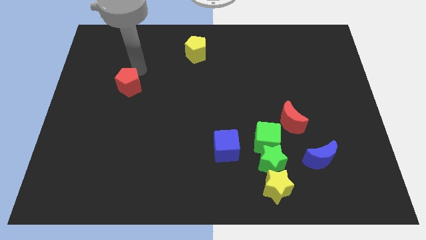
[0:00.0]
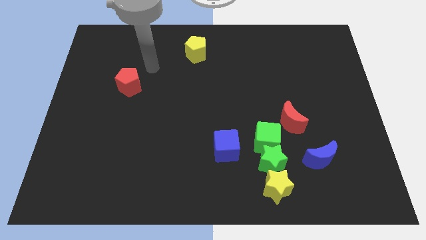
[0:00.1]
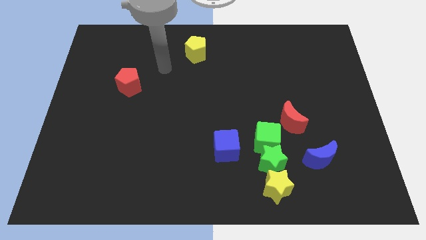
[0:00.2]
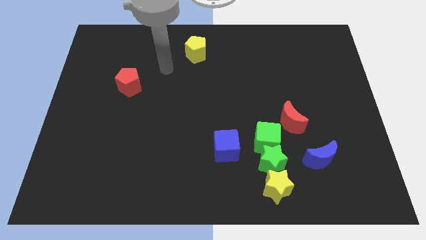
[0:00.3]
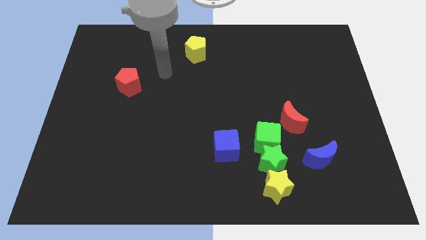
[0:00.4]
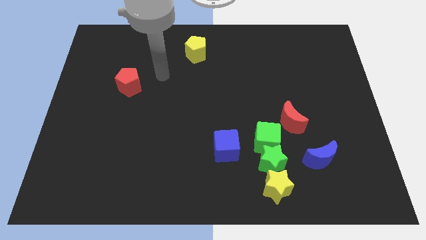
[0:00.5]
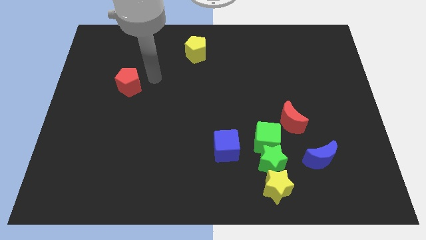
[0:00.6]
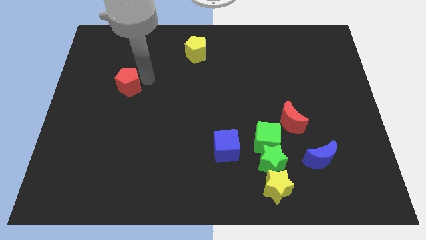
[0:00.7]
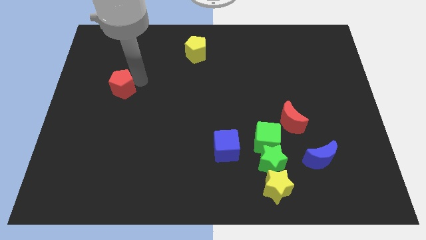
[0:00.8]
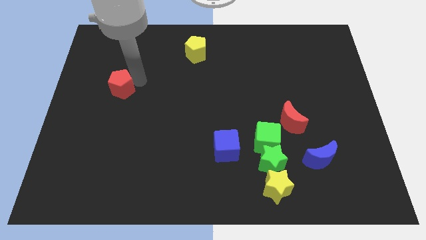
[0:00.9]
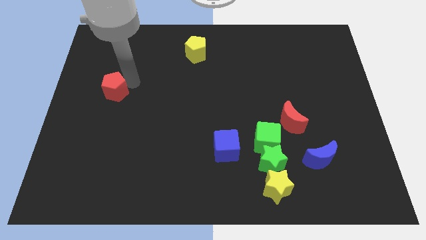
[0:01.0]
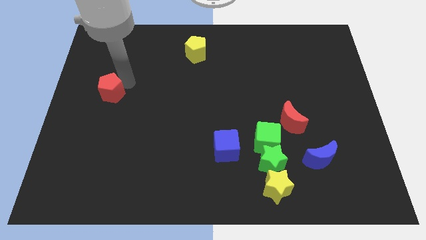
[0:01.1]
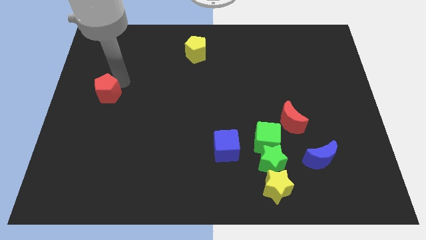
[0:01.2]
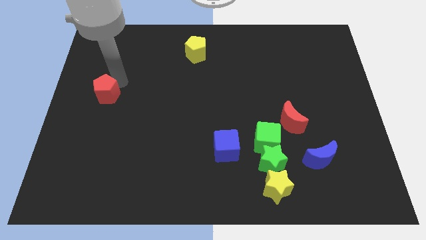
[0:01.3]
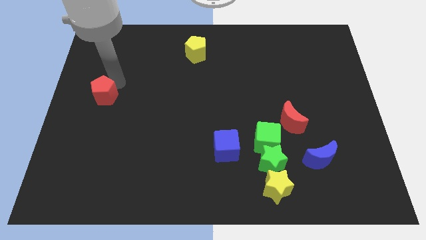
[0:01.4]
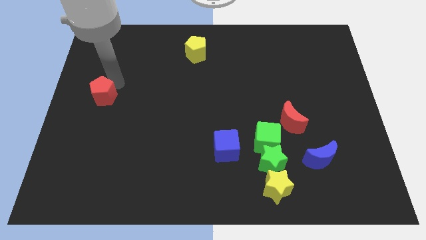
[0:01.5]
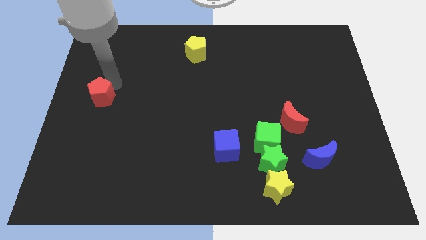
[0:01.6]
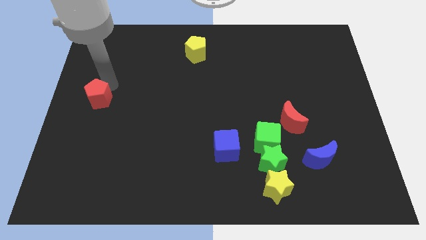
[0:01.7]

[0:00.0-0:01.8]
move the red pentagon to the center left

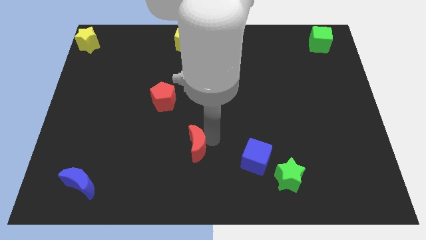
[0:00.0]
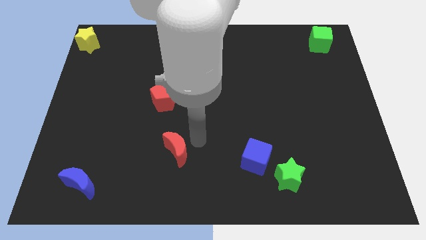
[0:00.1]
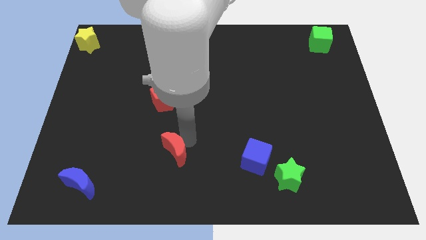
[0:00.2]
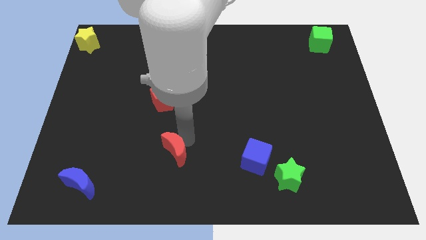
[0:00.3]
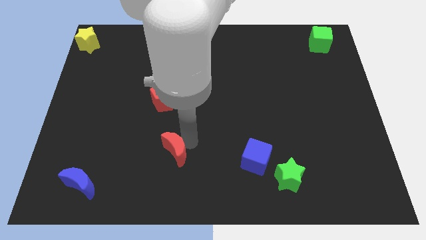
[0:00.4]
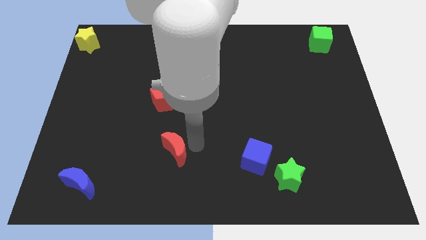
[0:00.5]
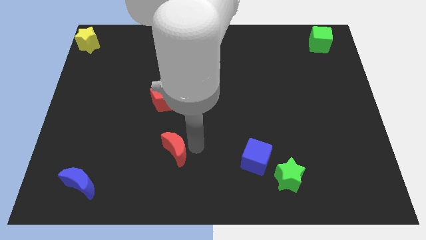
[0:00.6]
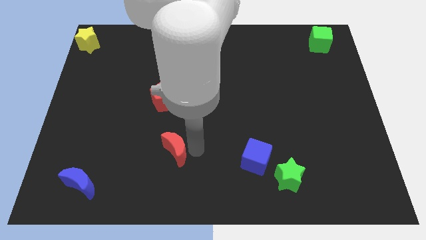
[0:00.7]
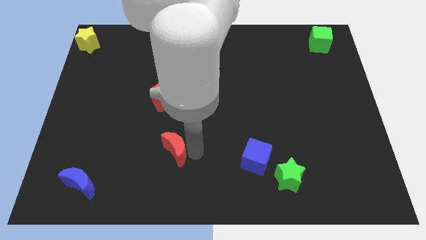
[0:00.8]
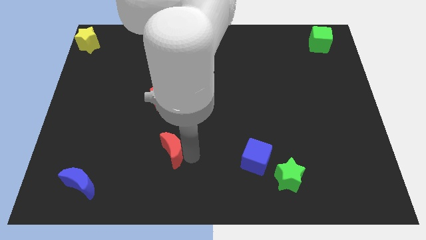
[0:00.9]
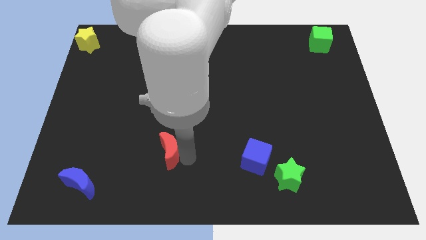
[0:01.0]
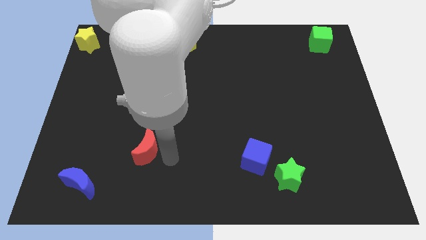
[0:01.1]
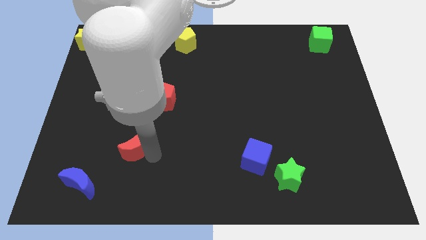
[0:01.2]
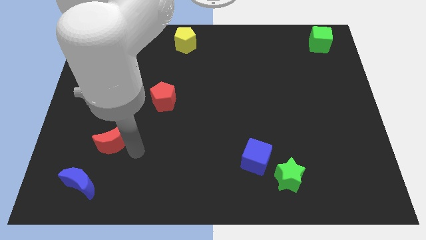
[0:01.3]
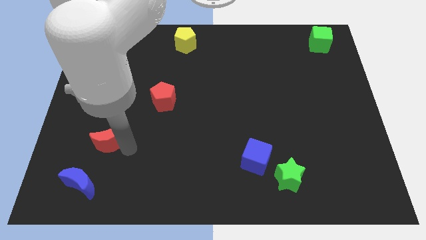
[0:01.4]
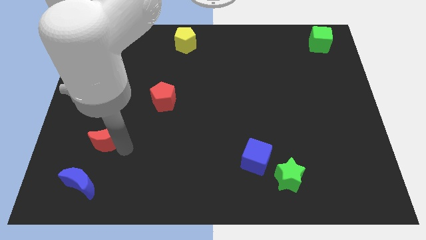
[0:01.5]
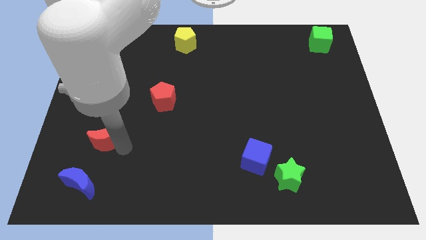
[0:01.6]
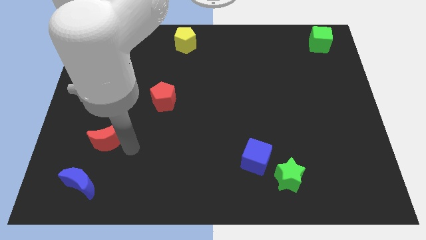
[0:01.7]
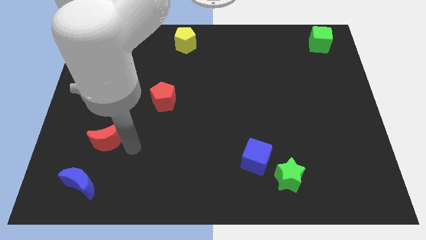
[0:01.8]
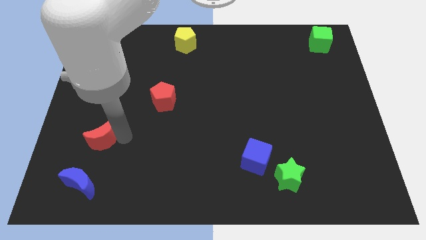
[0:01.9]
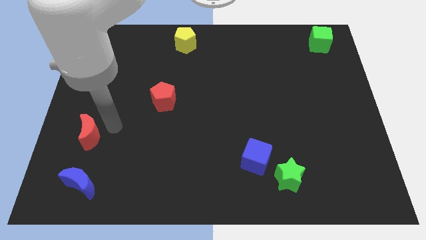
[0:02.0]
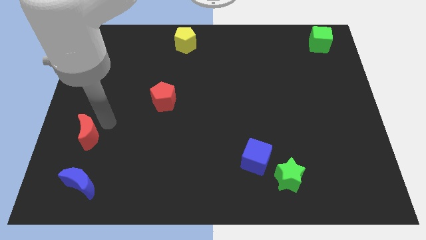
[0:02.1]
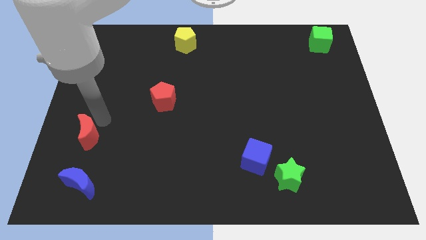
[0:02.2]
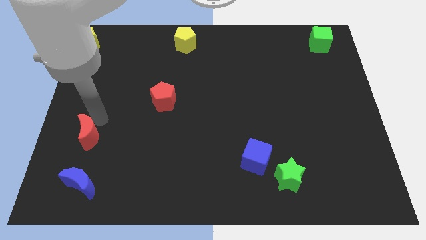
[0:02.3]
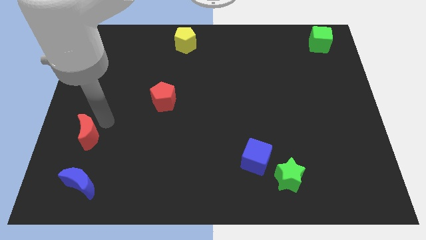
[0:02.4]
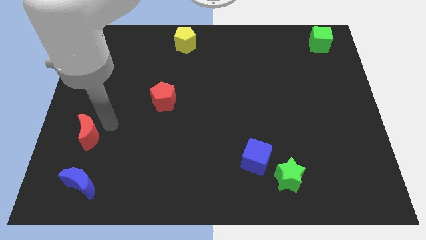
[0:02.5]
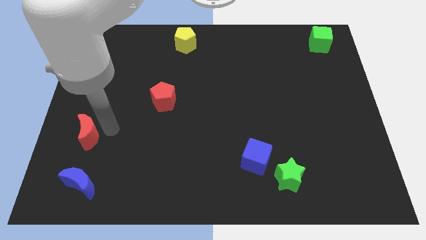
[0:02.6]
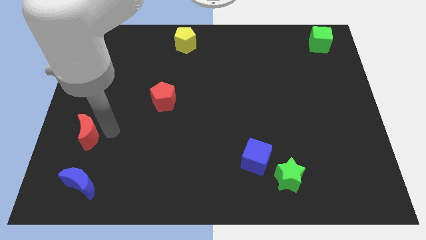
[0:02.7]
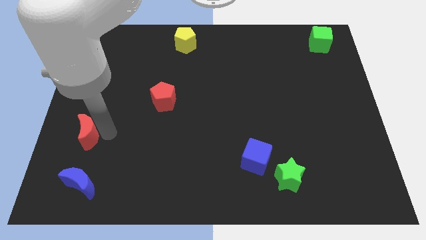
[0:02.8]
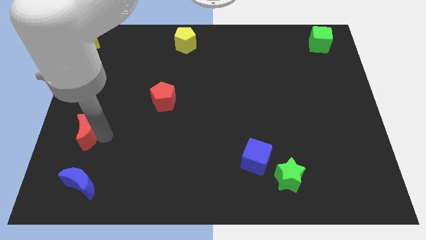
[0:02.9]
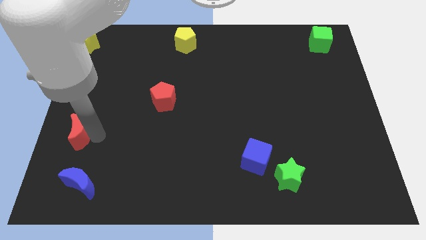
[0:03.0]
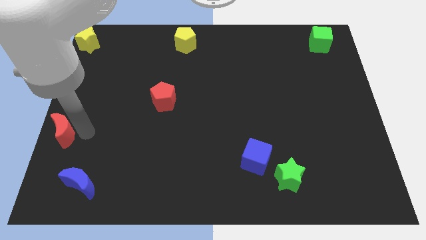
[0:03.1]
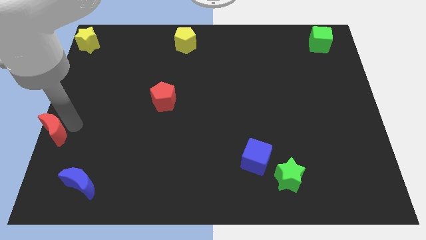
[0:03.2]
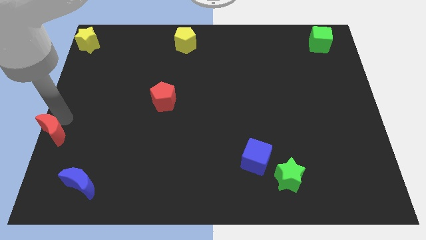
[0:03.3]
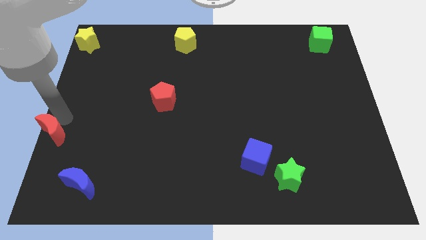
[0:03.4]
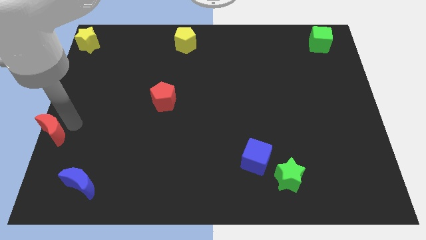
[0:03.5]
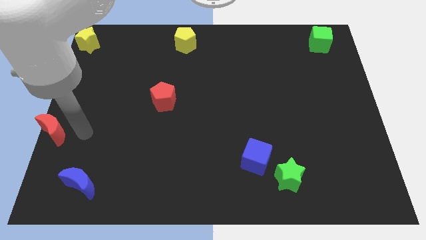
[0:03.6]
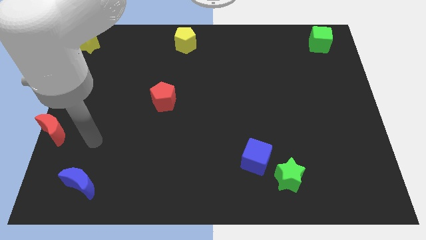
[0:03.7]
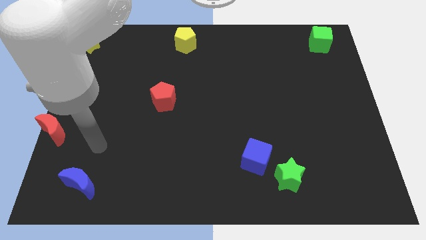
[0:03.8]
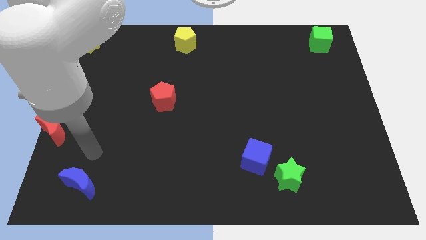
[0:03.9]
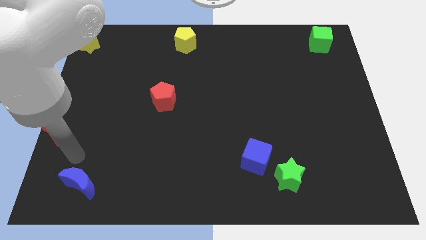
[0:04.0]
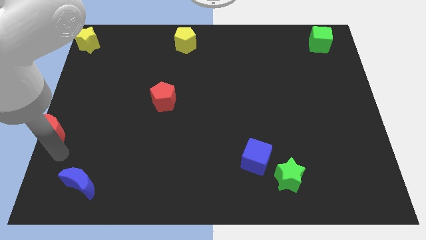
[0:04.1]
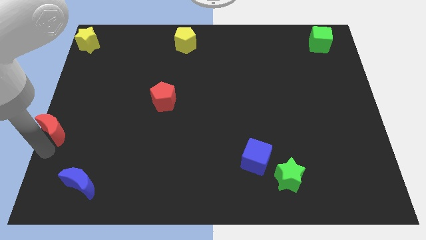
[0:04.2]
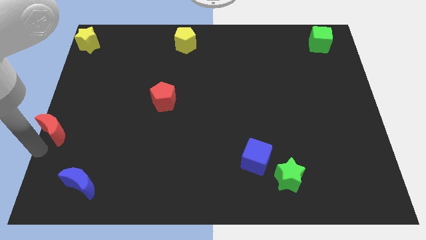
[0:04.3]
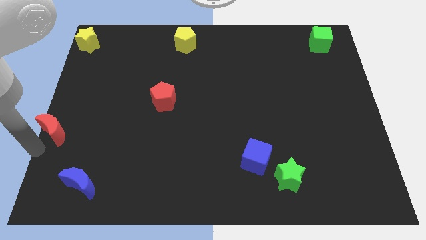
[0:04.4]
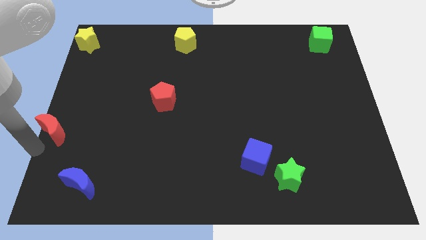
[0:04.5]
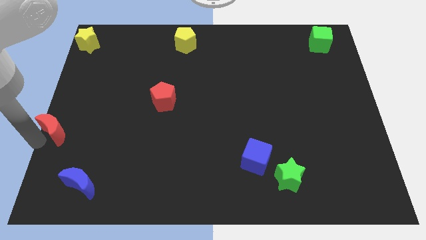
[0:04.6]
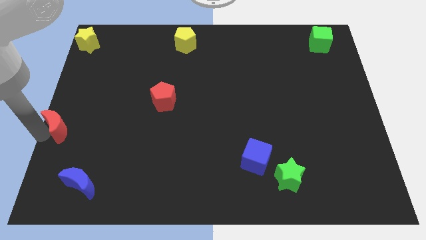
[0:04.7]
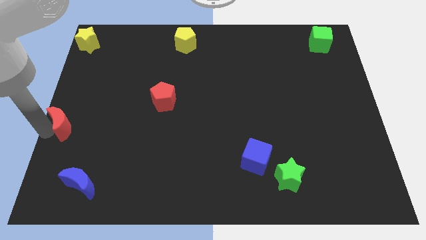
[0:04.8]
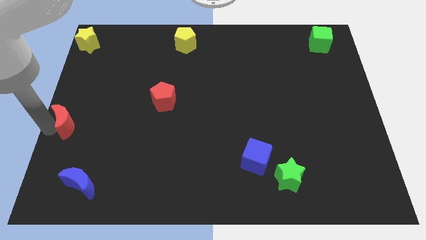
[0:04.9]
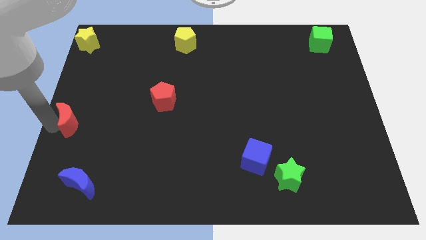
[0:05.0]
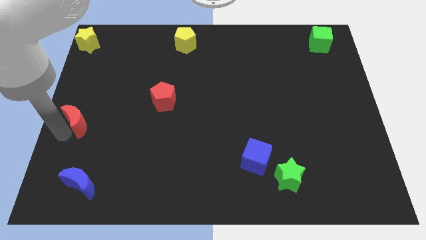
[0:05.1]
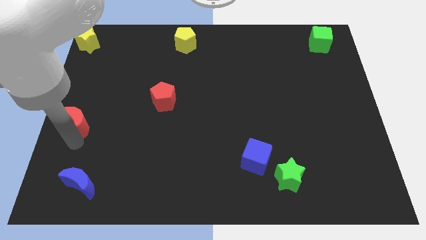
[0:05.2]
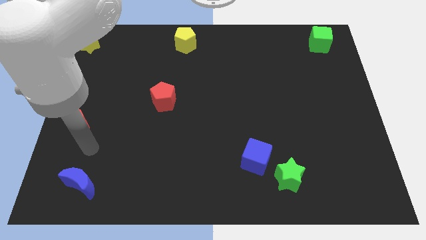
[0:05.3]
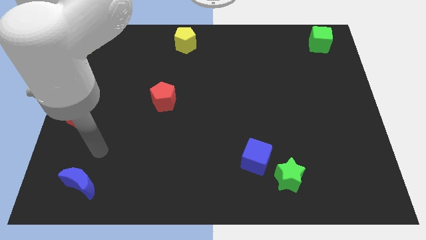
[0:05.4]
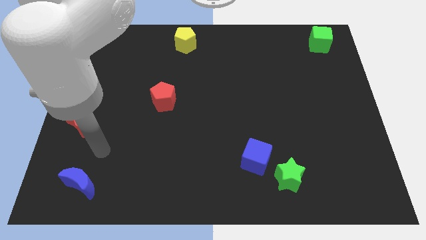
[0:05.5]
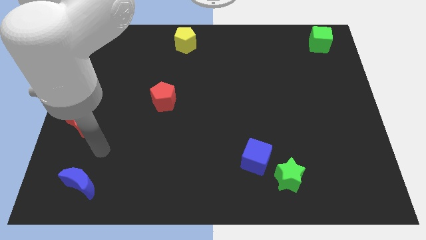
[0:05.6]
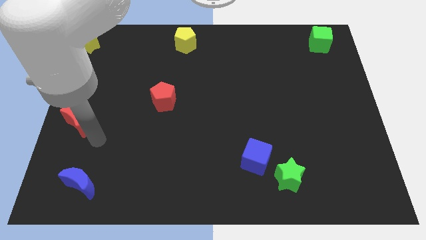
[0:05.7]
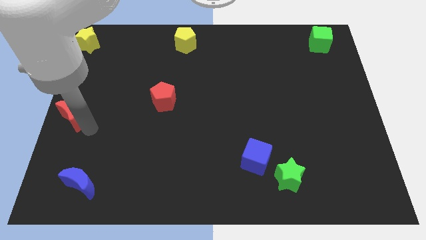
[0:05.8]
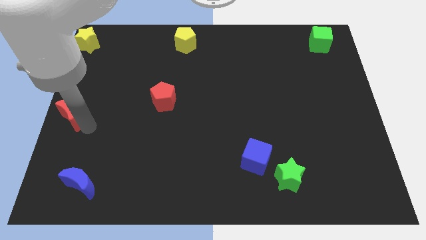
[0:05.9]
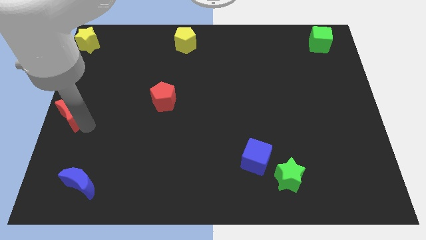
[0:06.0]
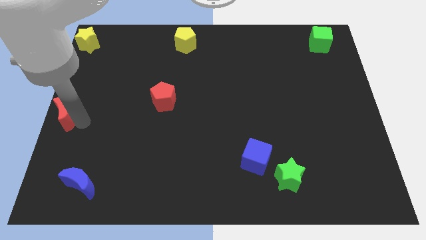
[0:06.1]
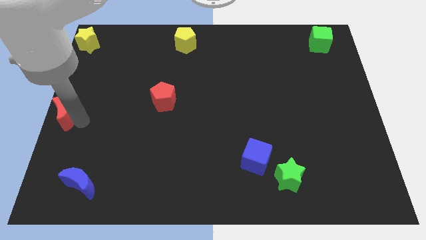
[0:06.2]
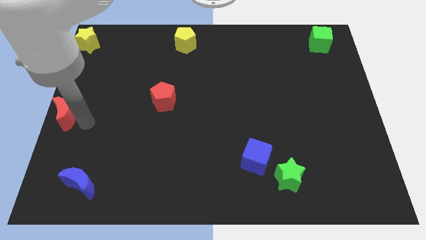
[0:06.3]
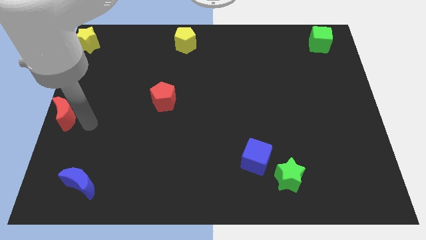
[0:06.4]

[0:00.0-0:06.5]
move the red moon to the center left of the board

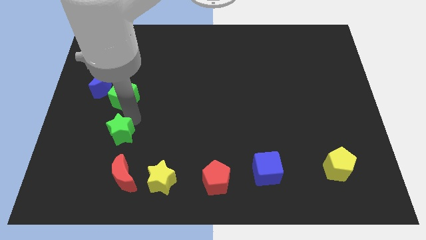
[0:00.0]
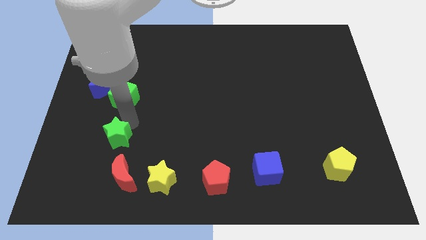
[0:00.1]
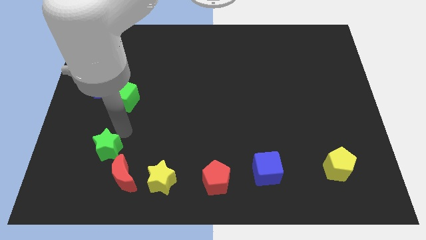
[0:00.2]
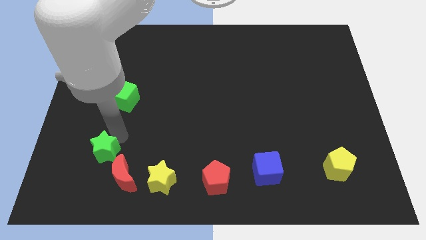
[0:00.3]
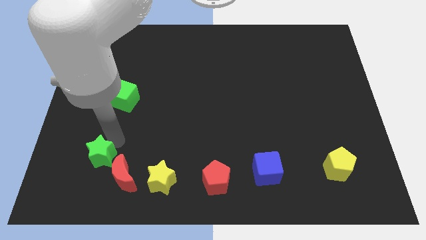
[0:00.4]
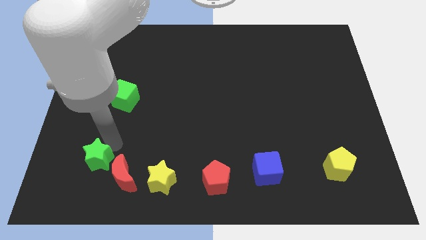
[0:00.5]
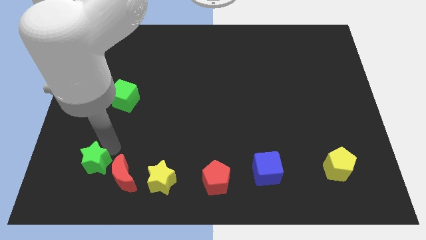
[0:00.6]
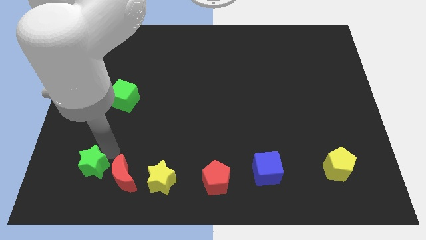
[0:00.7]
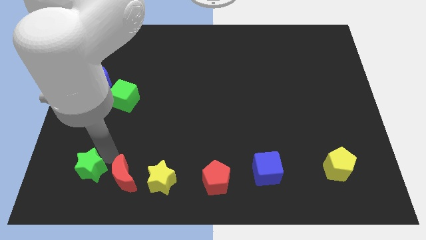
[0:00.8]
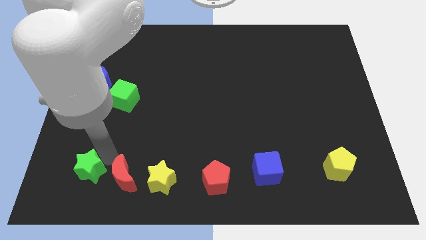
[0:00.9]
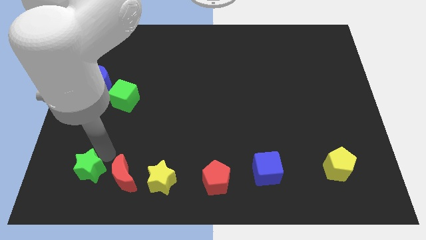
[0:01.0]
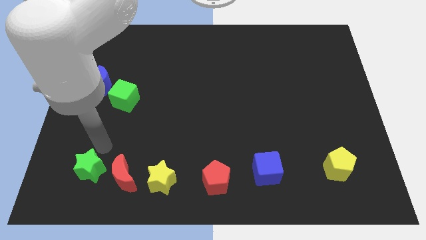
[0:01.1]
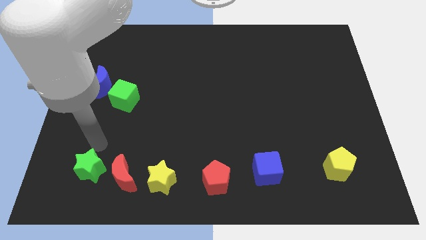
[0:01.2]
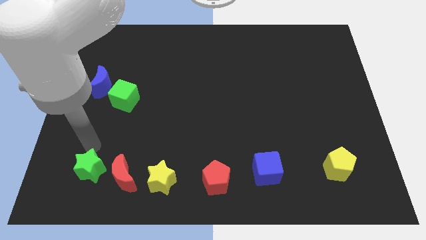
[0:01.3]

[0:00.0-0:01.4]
push the green star to the left of red crescent
